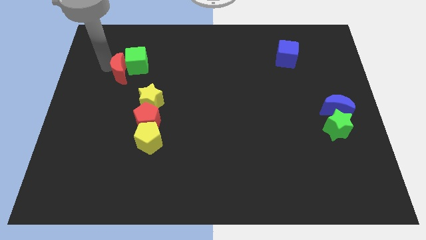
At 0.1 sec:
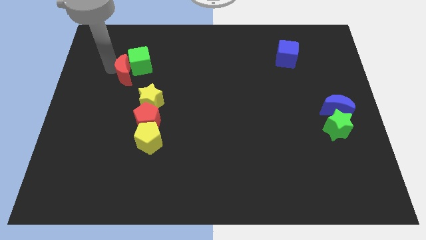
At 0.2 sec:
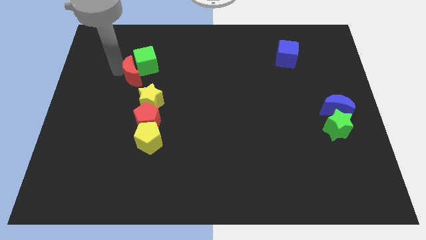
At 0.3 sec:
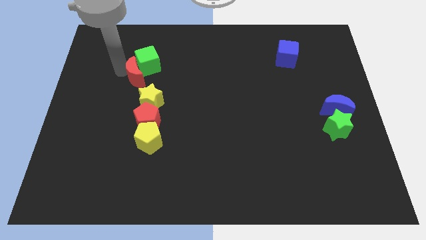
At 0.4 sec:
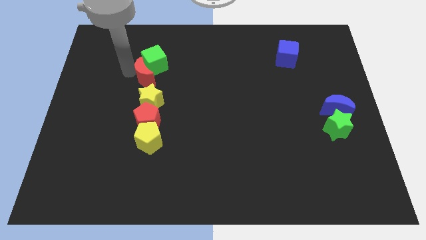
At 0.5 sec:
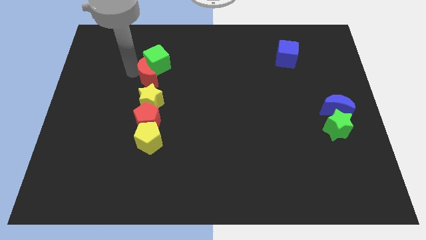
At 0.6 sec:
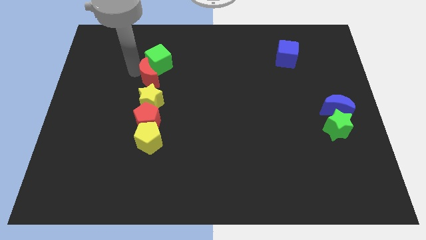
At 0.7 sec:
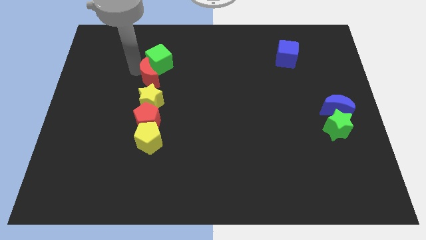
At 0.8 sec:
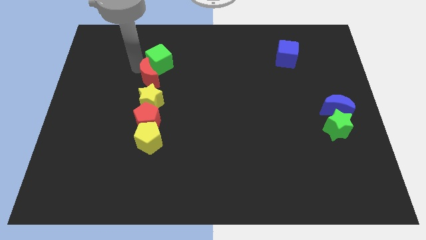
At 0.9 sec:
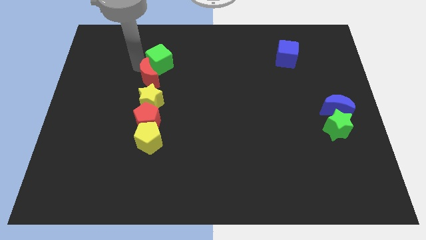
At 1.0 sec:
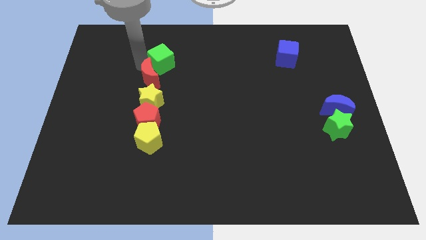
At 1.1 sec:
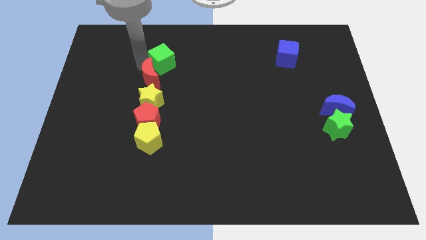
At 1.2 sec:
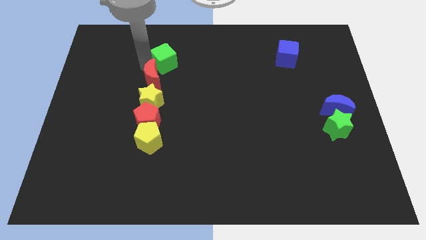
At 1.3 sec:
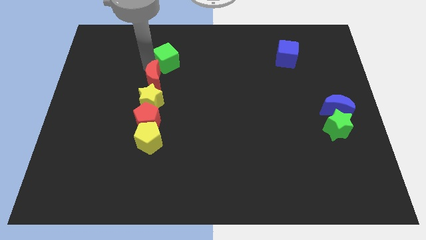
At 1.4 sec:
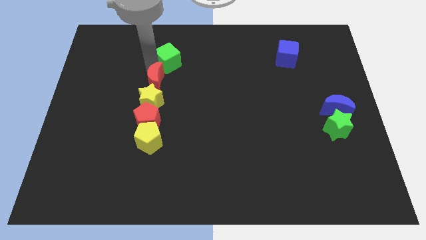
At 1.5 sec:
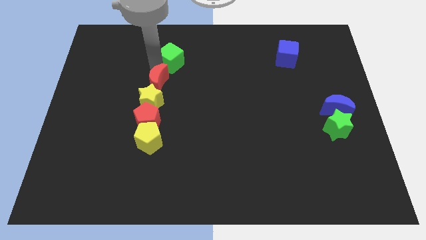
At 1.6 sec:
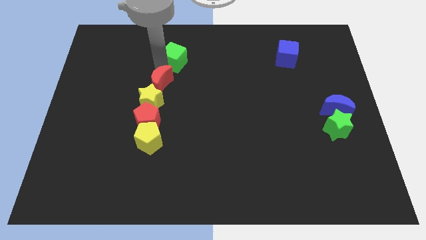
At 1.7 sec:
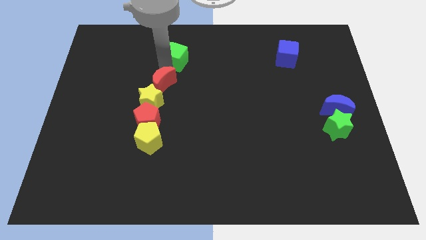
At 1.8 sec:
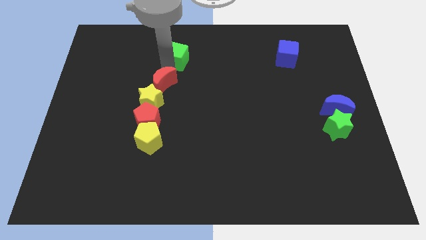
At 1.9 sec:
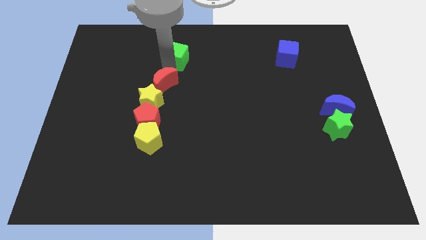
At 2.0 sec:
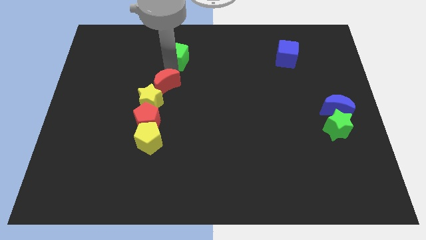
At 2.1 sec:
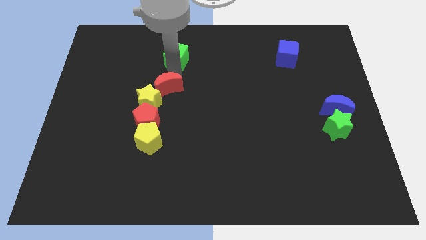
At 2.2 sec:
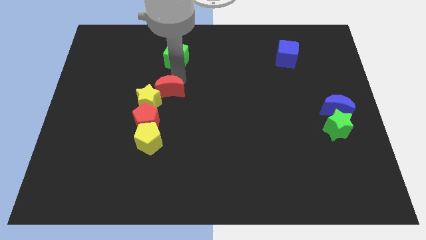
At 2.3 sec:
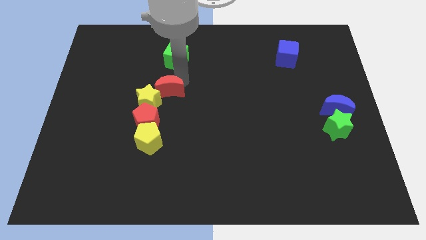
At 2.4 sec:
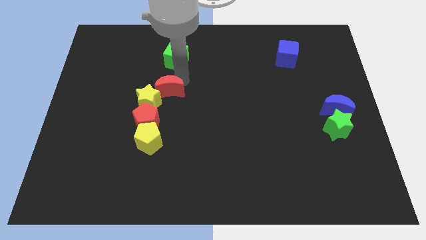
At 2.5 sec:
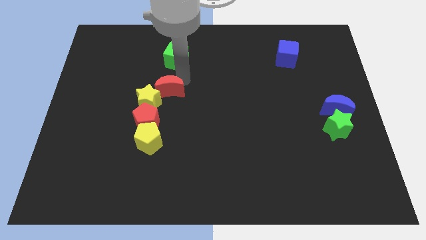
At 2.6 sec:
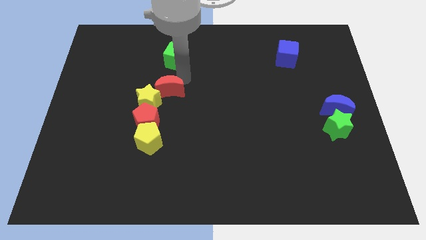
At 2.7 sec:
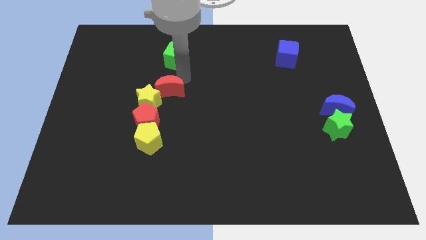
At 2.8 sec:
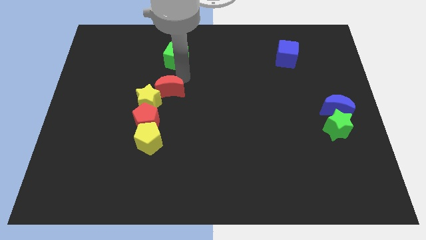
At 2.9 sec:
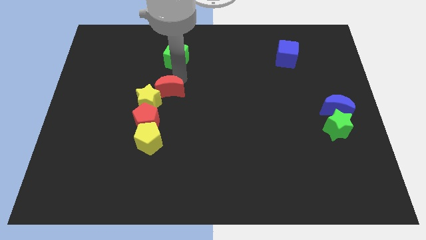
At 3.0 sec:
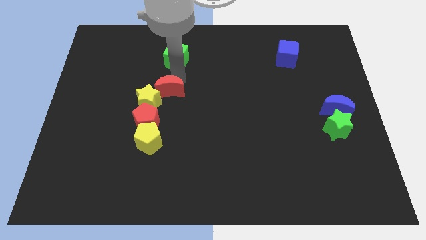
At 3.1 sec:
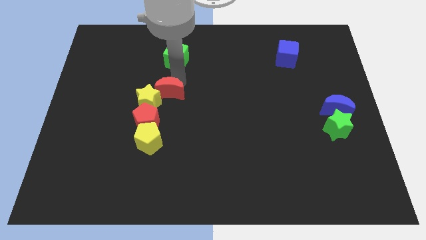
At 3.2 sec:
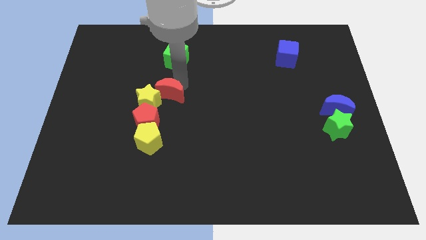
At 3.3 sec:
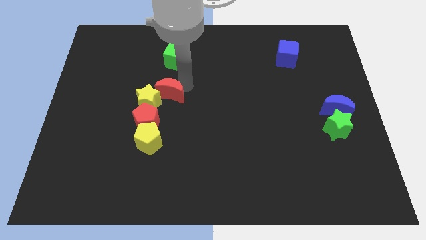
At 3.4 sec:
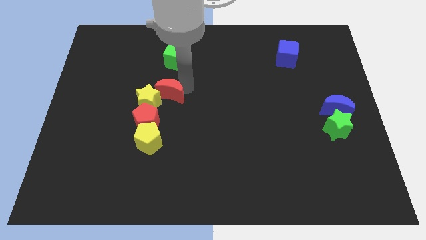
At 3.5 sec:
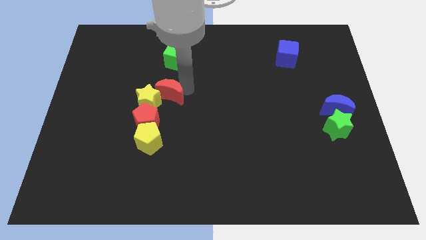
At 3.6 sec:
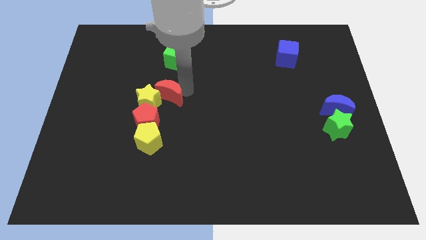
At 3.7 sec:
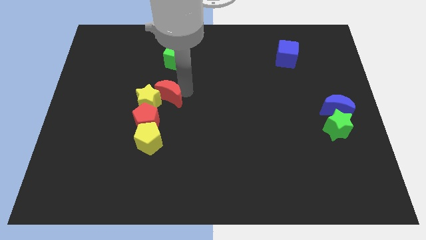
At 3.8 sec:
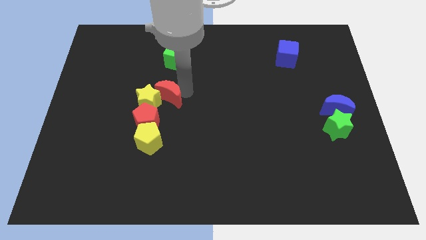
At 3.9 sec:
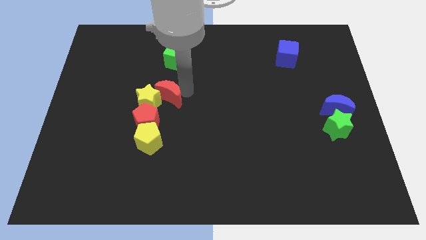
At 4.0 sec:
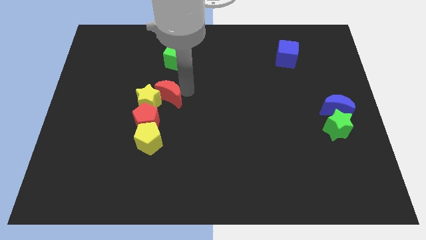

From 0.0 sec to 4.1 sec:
push the red moon into the yellow star

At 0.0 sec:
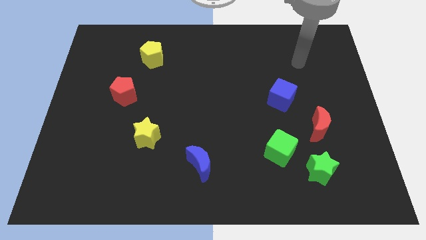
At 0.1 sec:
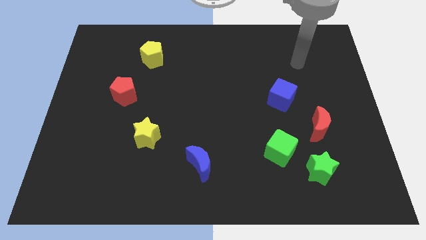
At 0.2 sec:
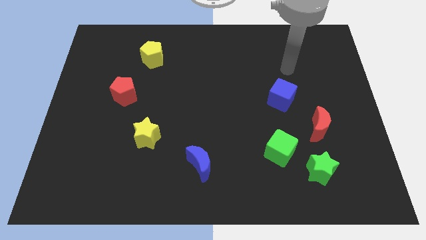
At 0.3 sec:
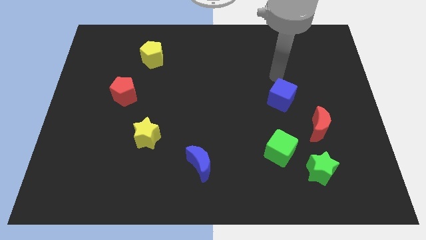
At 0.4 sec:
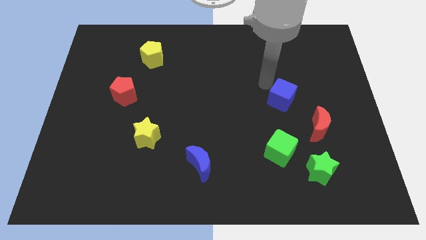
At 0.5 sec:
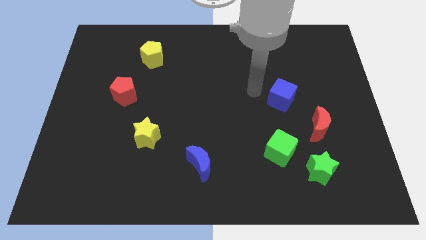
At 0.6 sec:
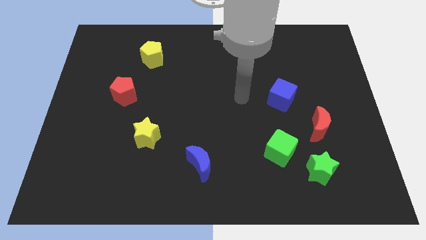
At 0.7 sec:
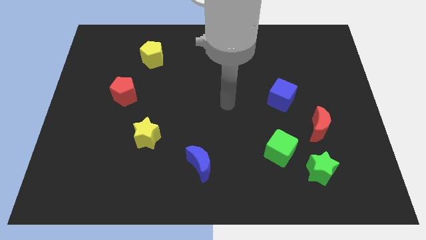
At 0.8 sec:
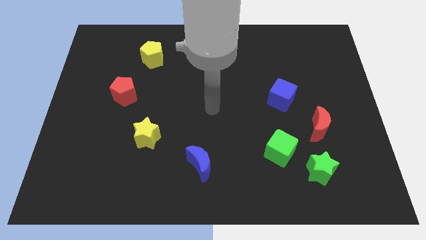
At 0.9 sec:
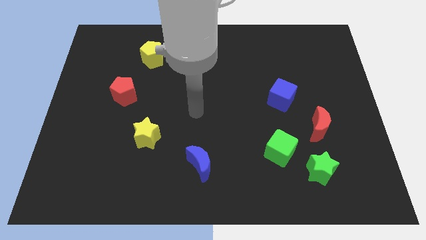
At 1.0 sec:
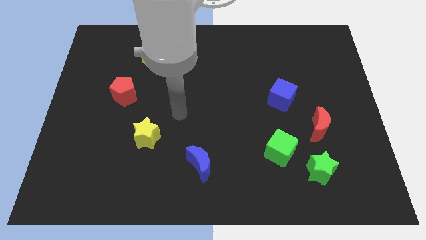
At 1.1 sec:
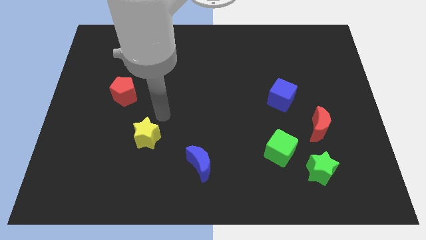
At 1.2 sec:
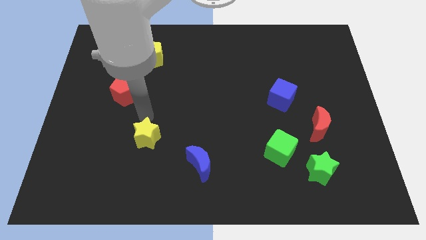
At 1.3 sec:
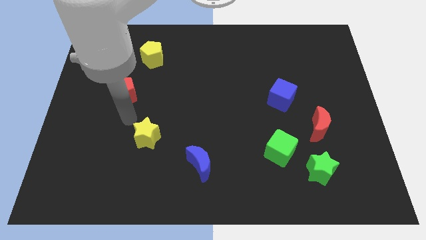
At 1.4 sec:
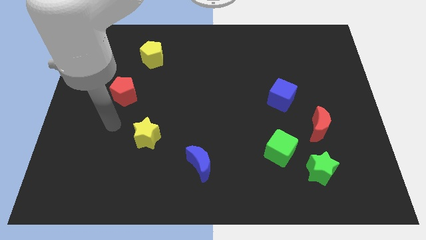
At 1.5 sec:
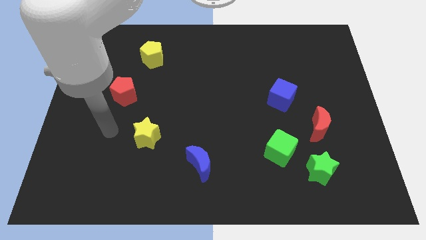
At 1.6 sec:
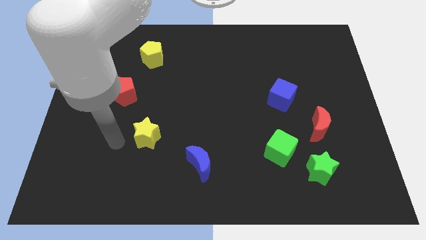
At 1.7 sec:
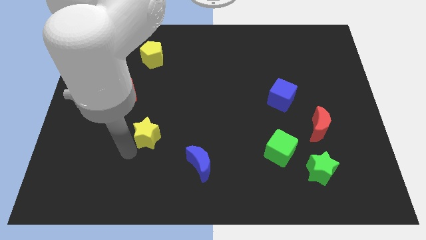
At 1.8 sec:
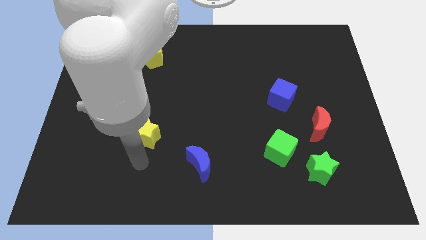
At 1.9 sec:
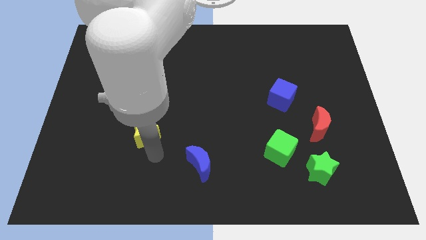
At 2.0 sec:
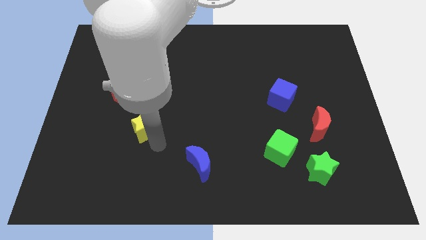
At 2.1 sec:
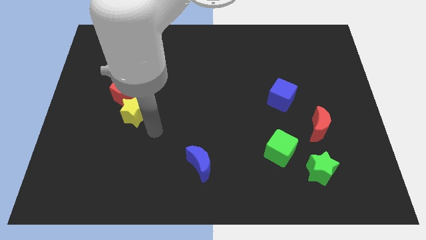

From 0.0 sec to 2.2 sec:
push the yellow star slightly to the top of the board

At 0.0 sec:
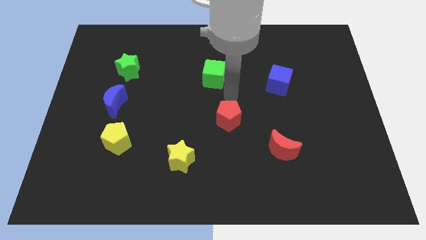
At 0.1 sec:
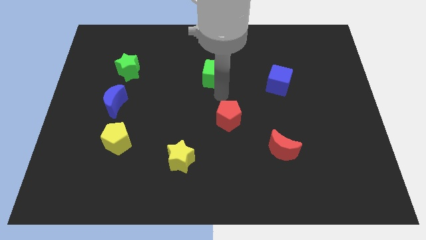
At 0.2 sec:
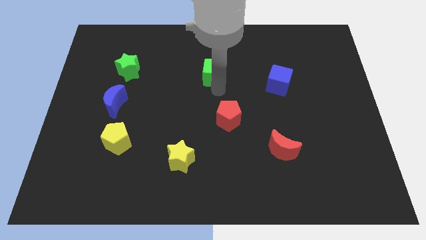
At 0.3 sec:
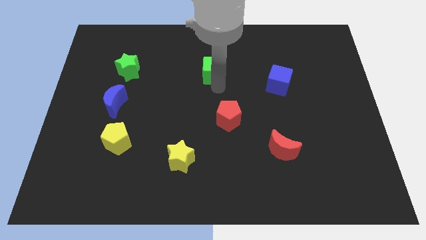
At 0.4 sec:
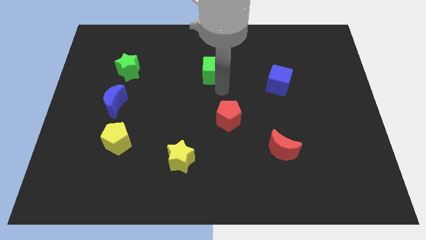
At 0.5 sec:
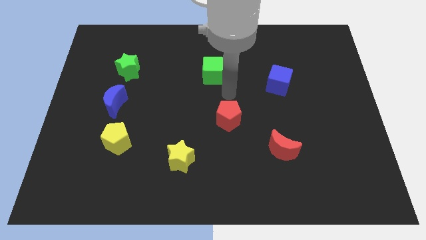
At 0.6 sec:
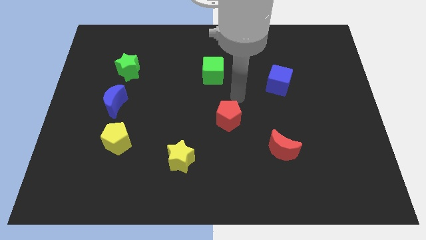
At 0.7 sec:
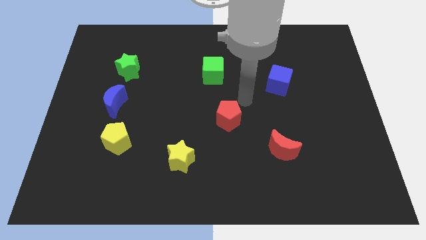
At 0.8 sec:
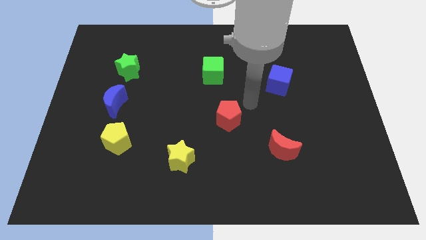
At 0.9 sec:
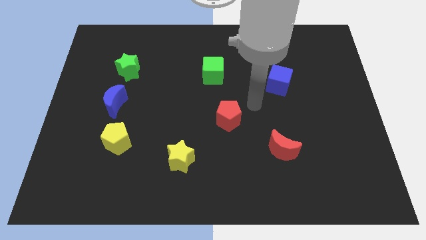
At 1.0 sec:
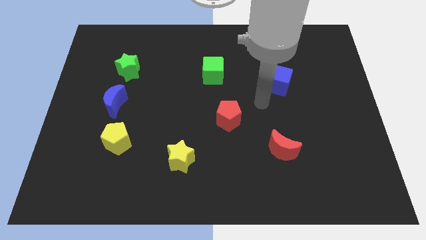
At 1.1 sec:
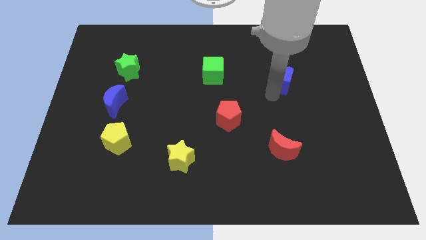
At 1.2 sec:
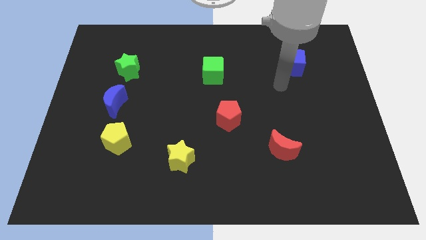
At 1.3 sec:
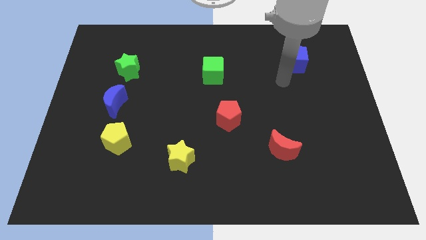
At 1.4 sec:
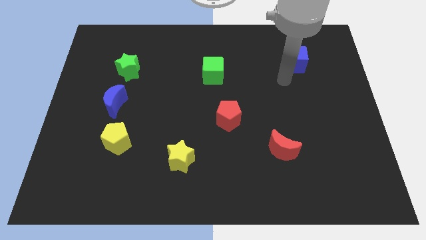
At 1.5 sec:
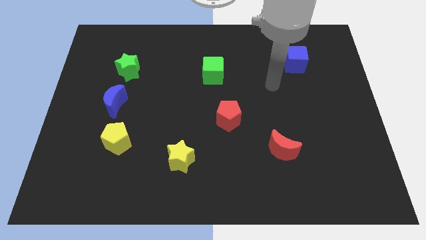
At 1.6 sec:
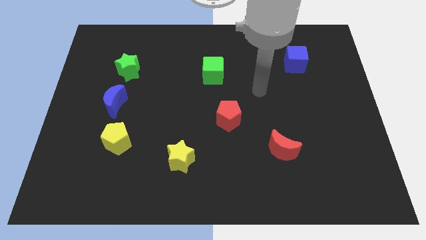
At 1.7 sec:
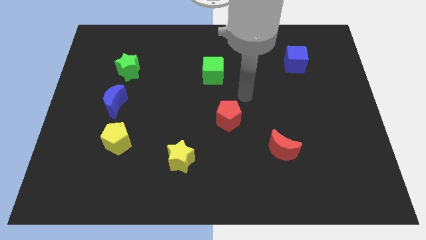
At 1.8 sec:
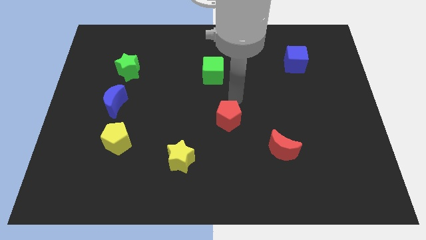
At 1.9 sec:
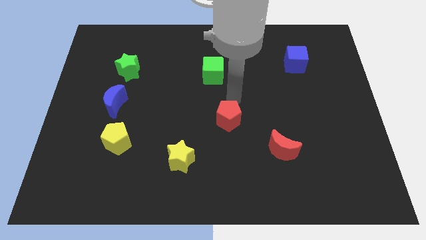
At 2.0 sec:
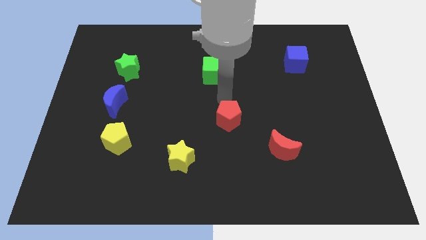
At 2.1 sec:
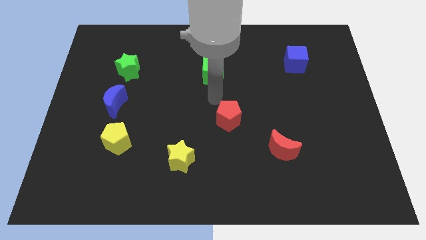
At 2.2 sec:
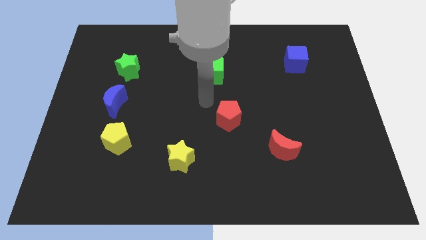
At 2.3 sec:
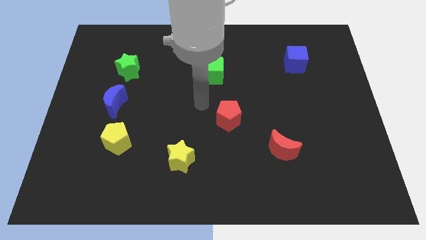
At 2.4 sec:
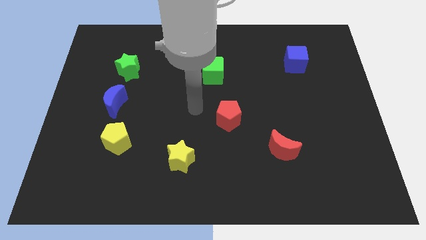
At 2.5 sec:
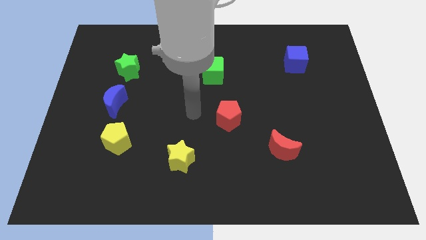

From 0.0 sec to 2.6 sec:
push the blue cube to the top right of the board
